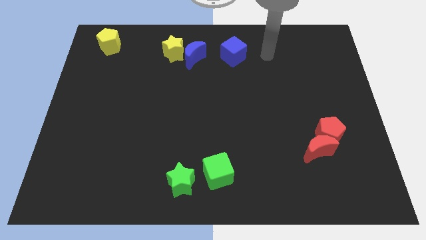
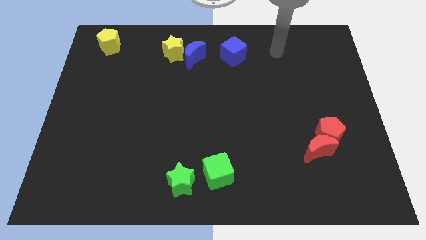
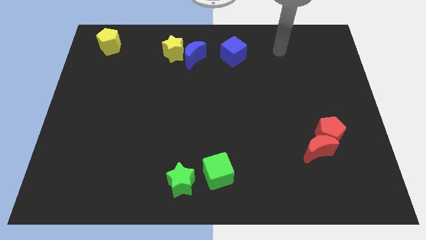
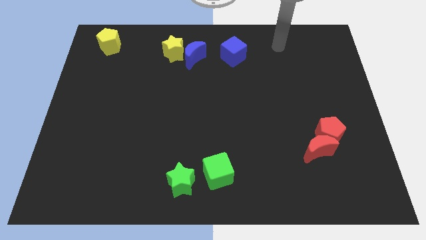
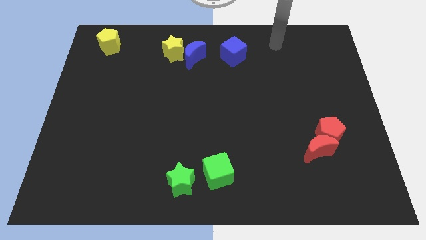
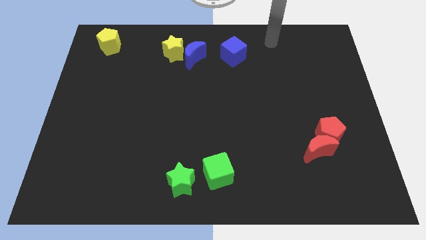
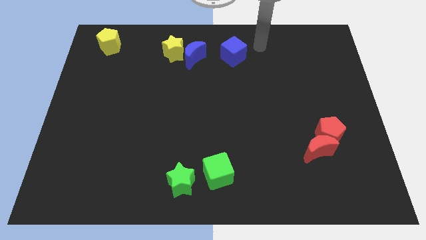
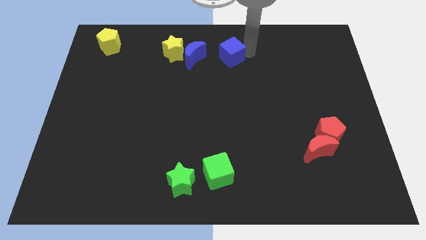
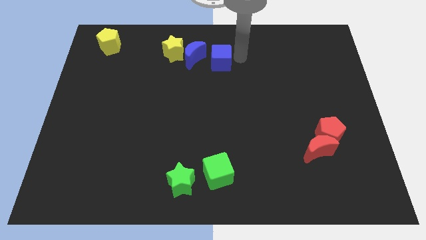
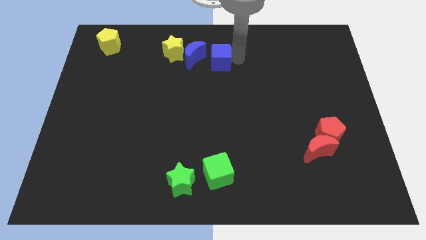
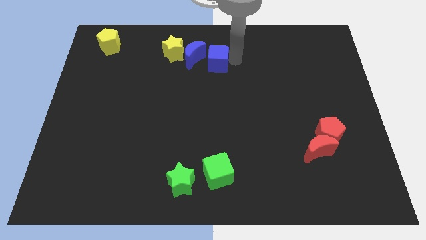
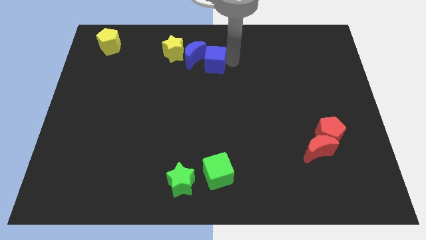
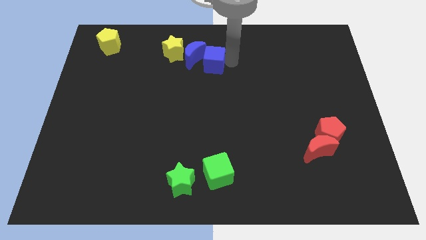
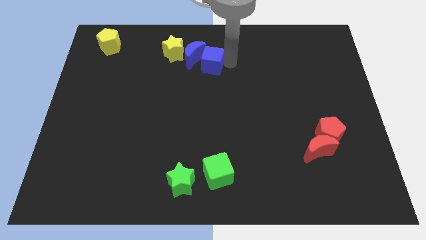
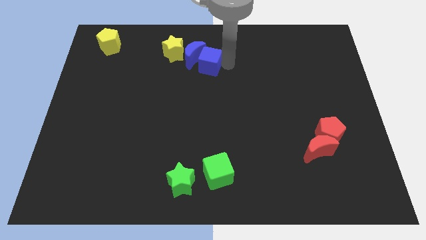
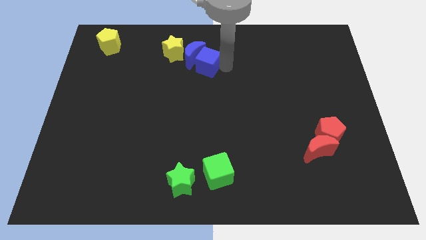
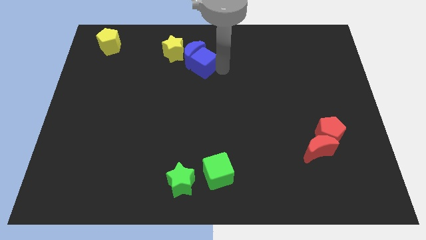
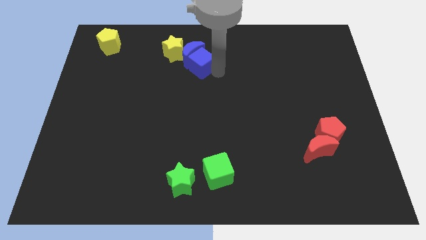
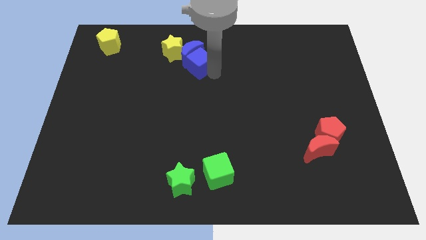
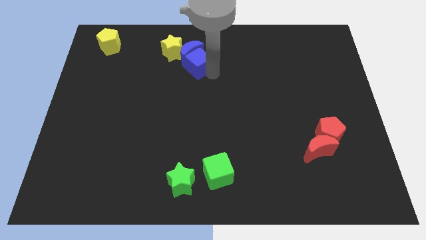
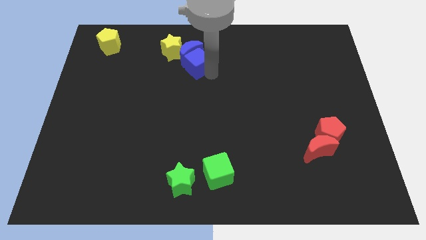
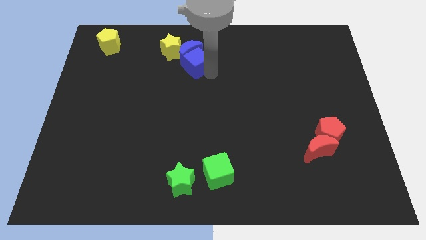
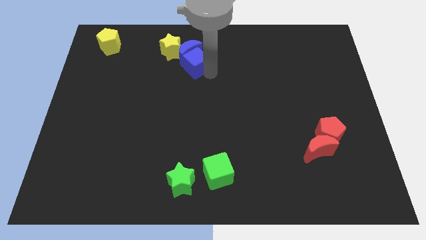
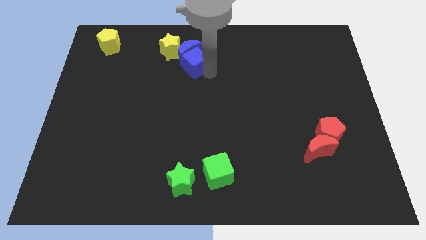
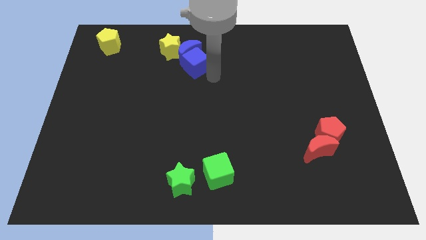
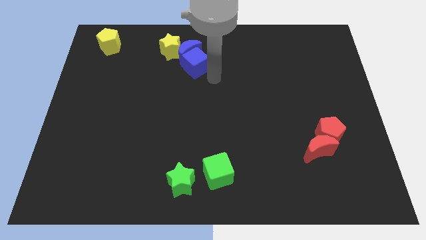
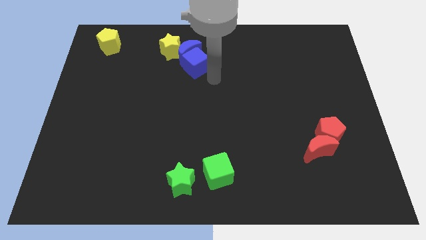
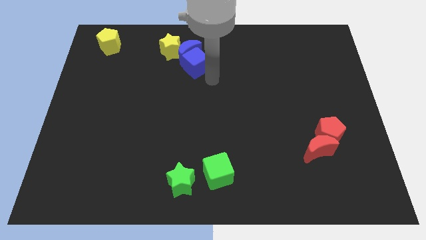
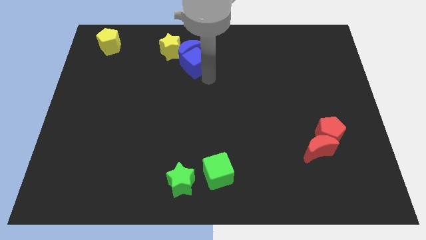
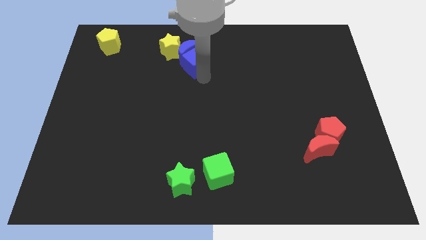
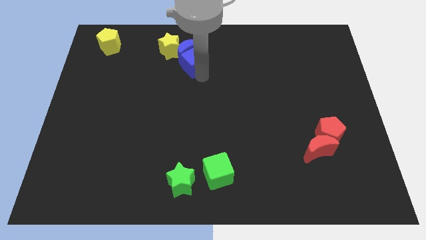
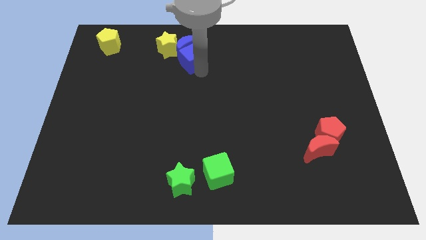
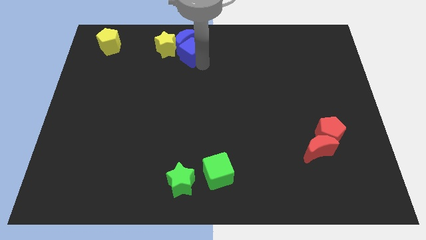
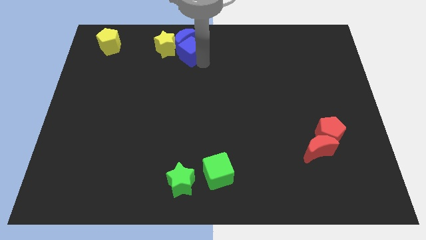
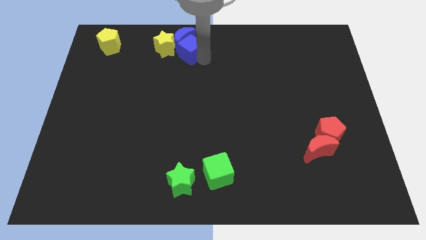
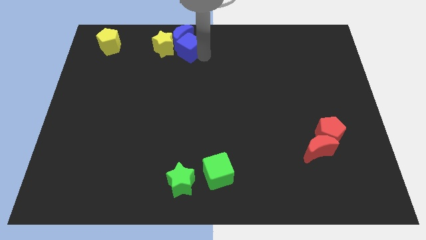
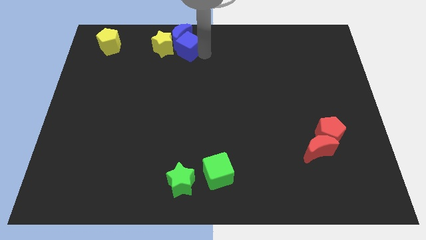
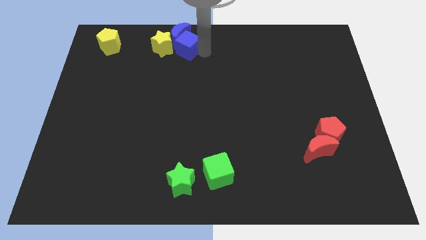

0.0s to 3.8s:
push blue cube in to blue crescent

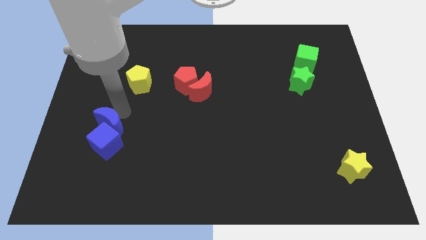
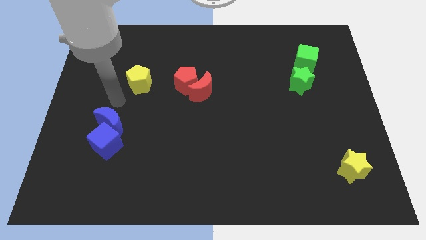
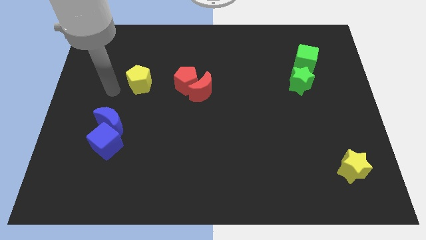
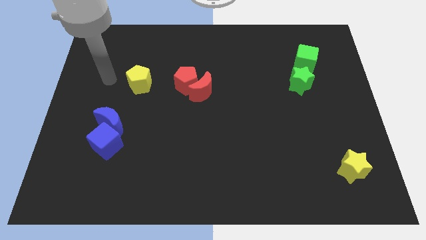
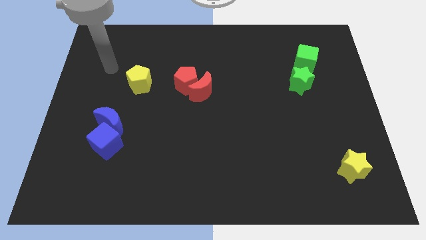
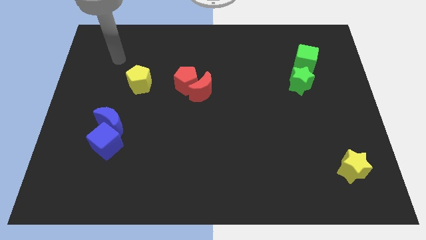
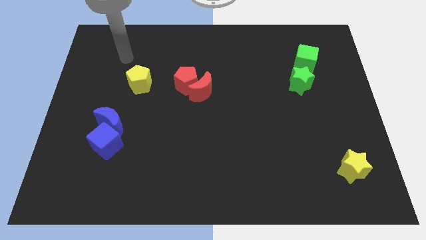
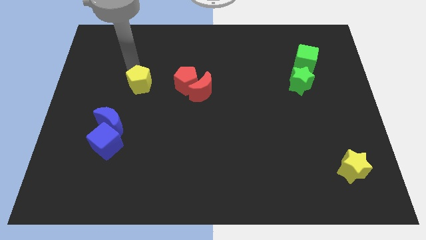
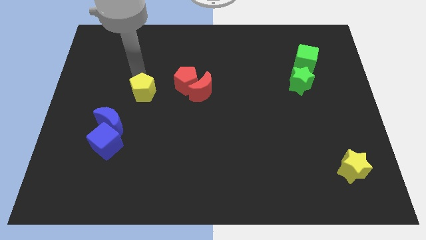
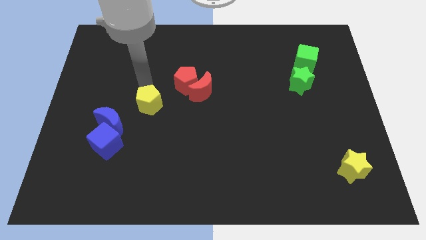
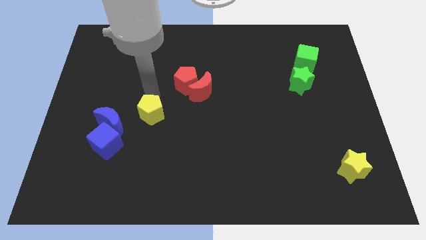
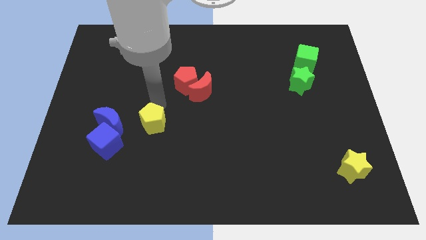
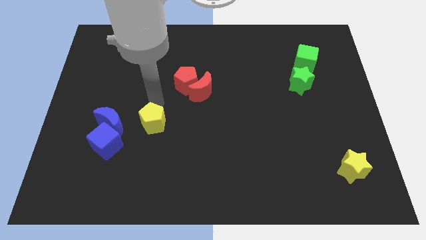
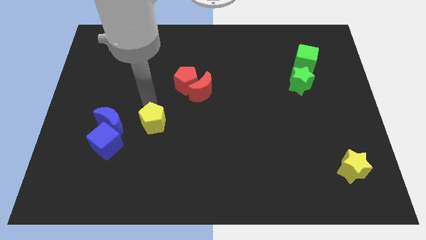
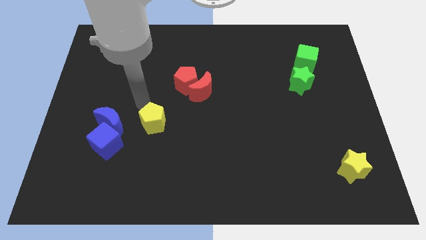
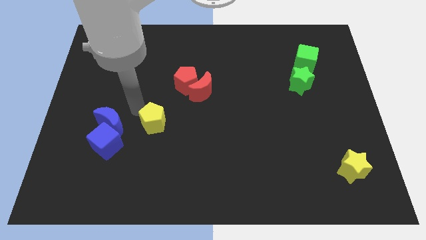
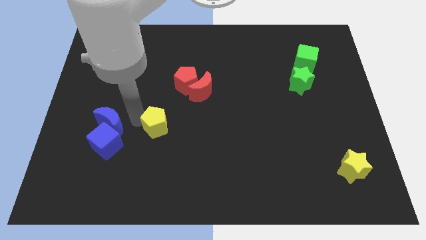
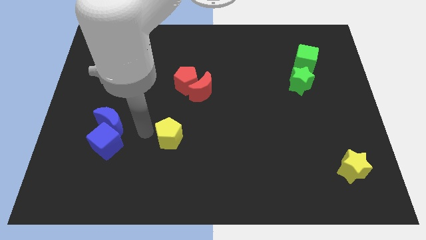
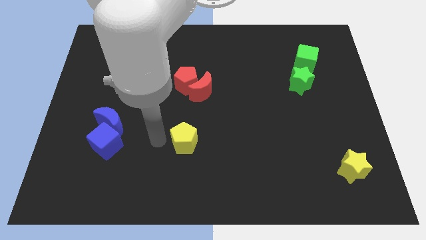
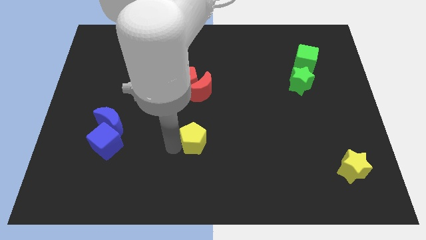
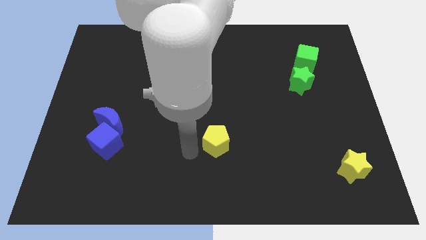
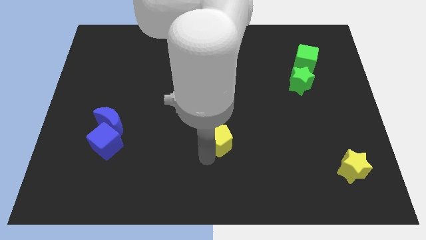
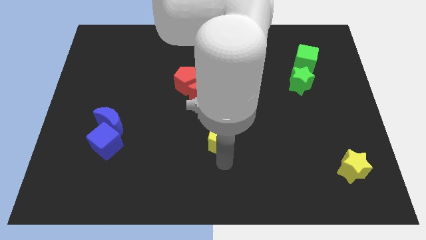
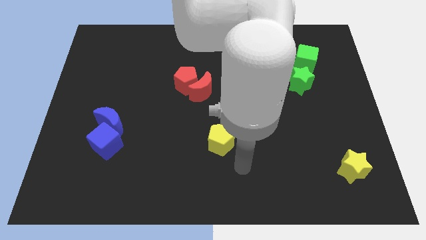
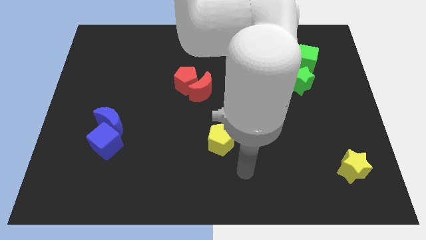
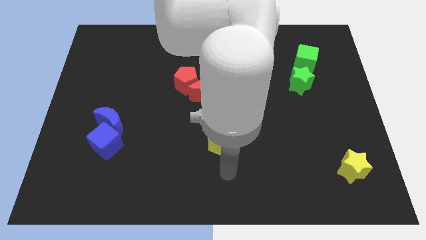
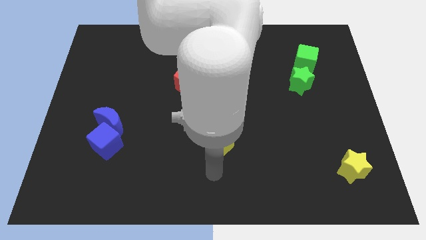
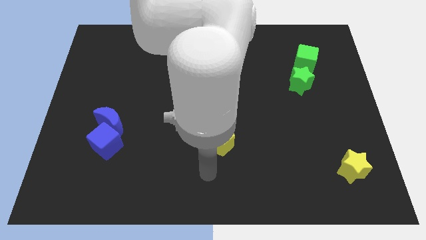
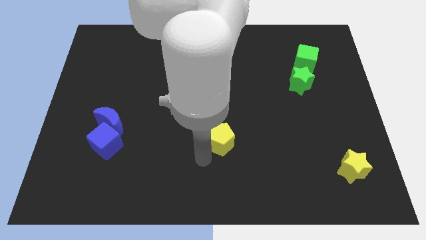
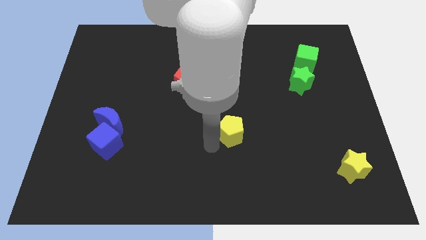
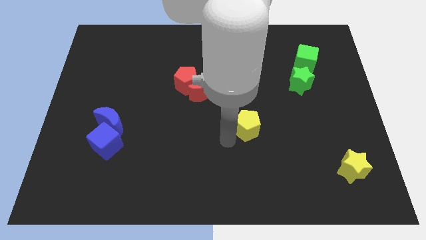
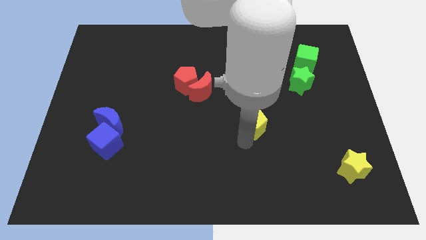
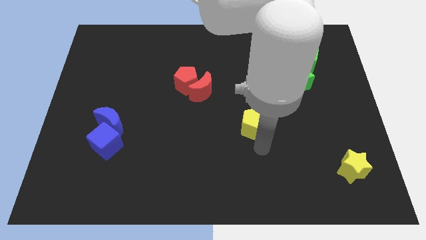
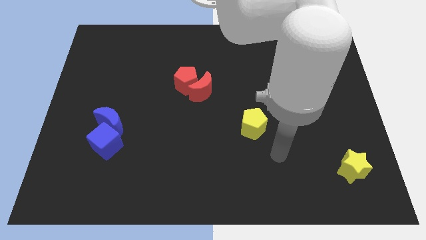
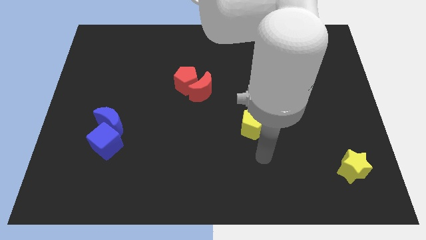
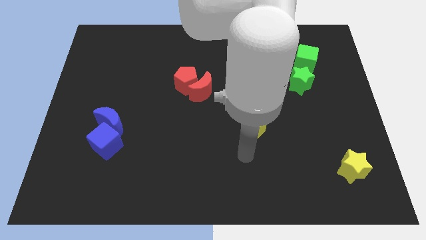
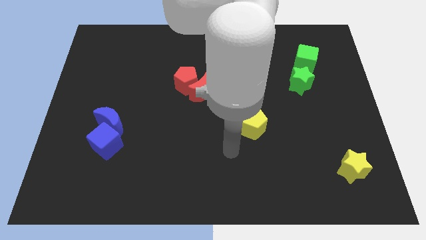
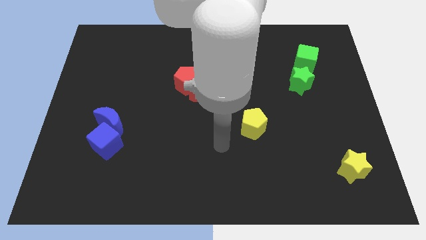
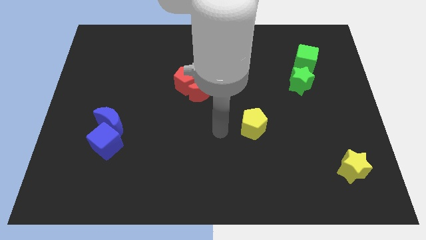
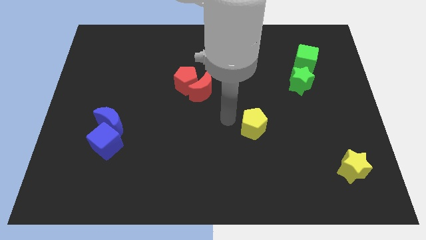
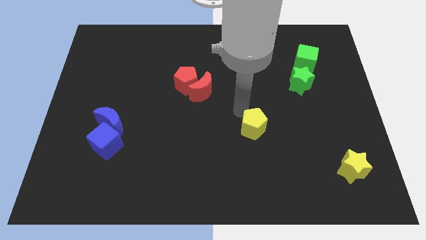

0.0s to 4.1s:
move yellow pentagon horizontally right to blue moon

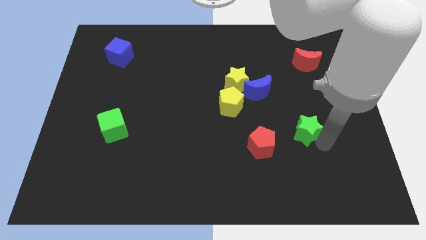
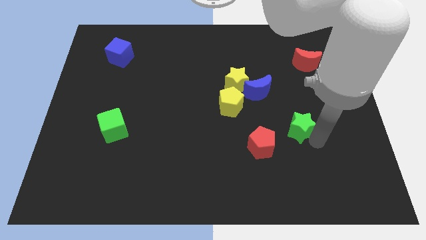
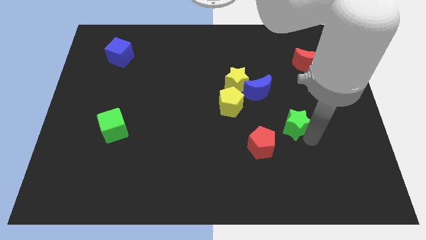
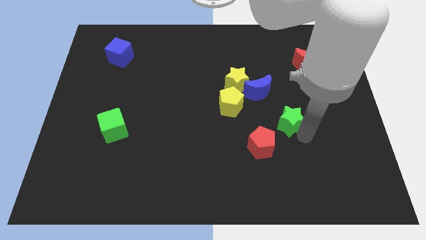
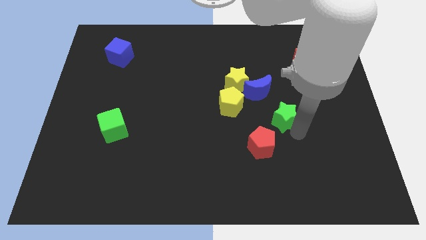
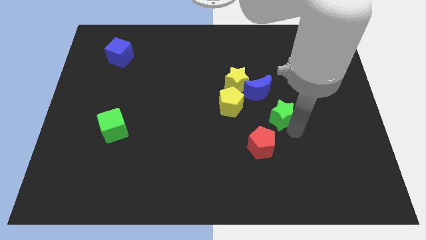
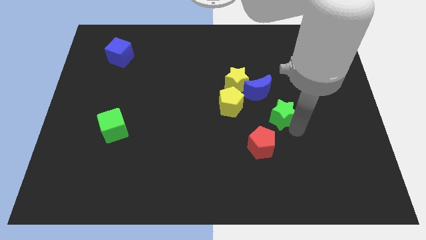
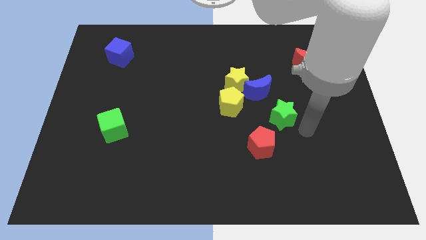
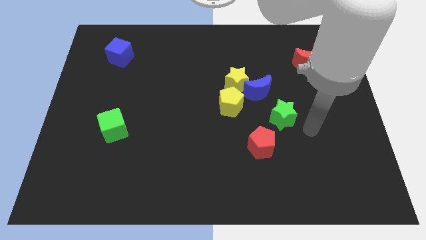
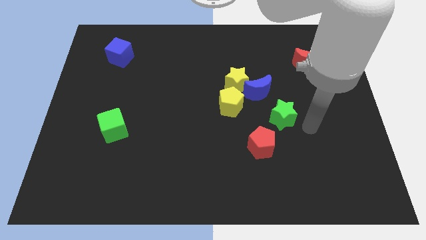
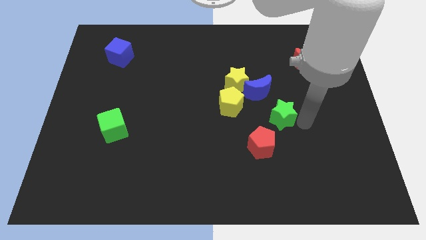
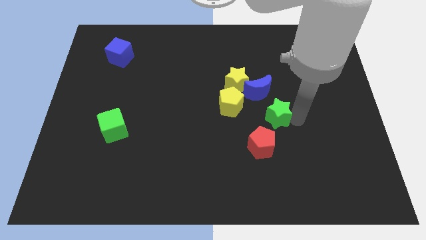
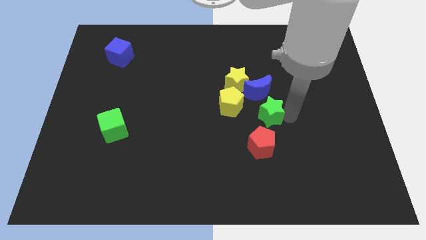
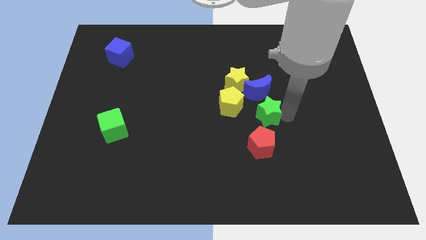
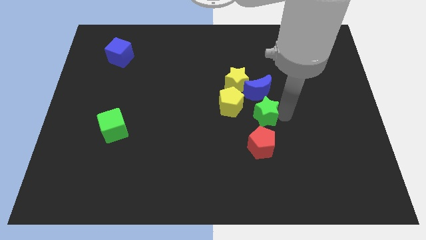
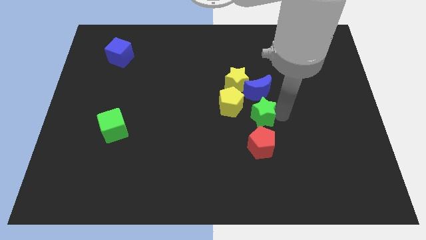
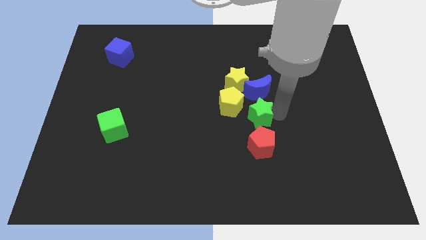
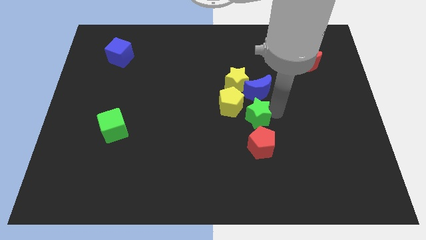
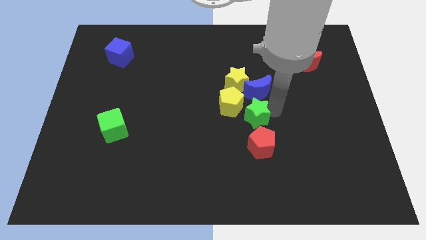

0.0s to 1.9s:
move the green star near to the blocks
